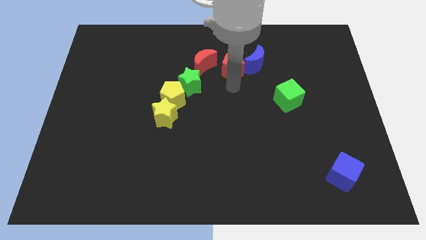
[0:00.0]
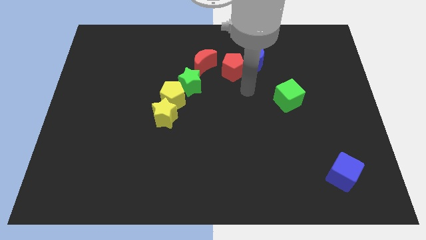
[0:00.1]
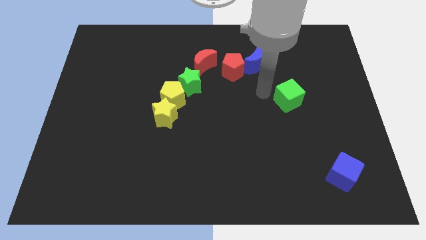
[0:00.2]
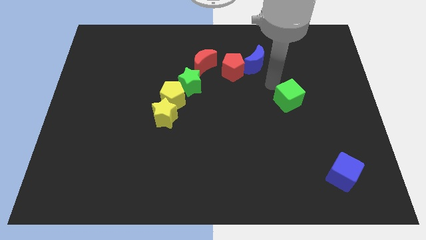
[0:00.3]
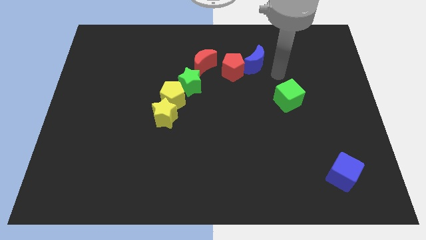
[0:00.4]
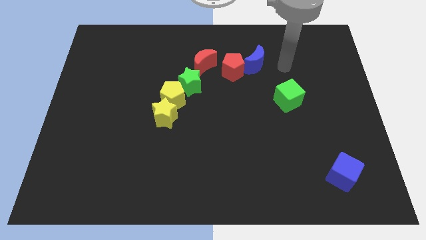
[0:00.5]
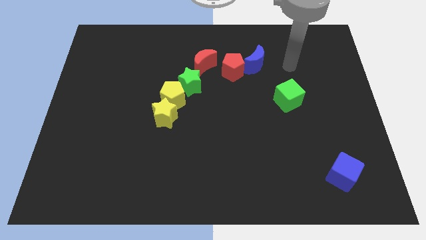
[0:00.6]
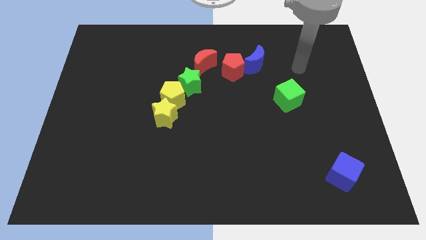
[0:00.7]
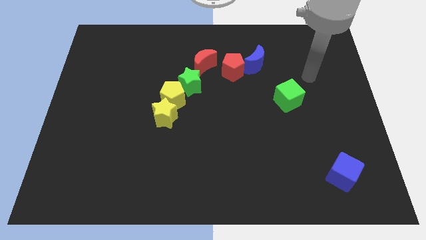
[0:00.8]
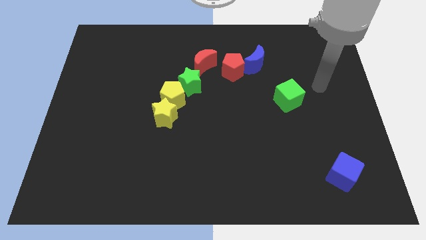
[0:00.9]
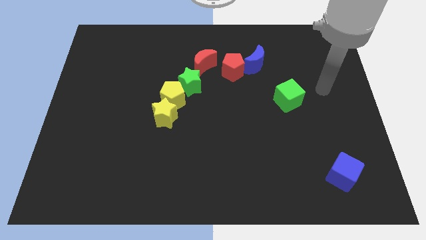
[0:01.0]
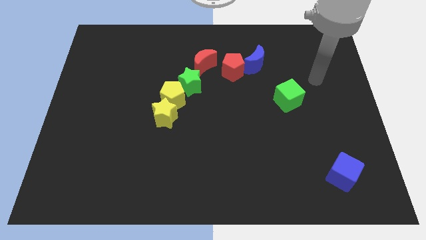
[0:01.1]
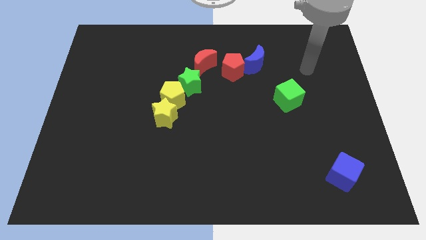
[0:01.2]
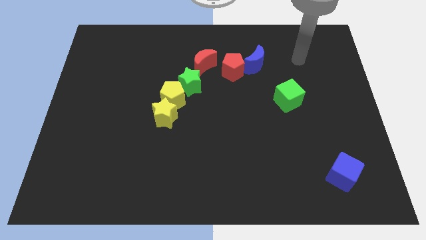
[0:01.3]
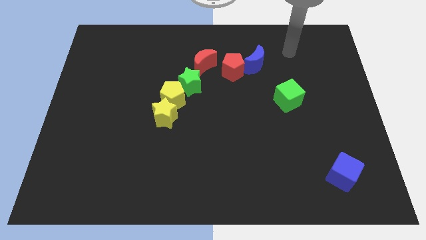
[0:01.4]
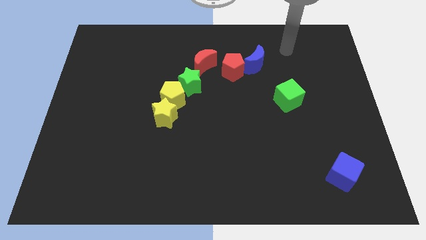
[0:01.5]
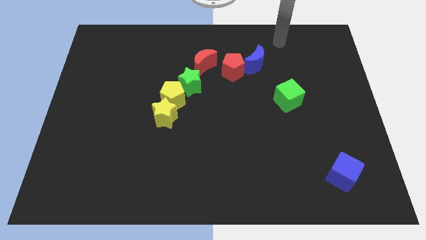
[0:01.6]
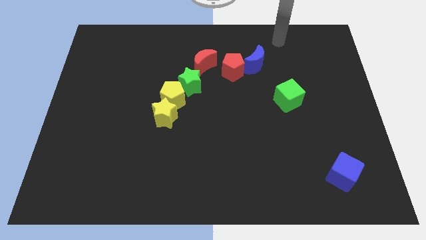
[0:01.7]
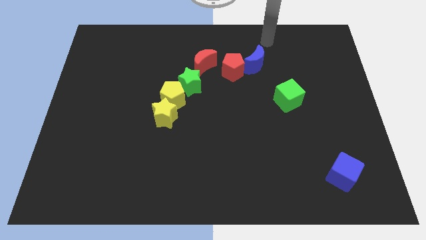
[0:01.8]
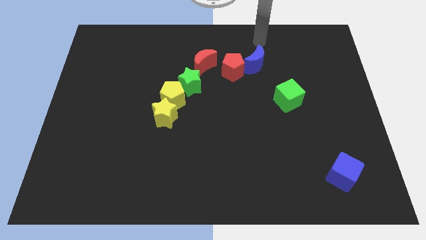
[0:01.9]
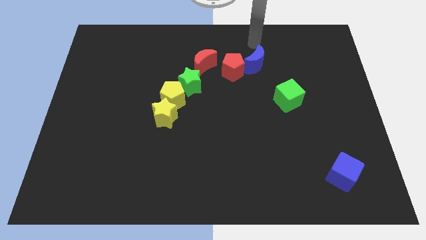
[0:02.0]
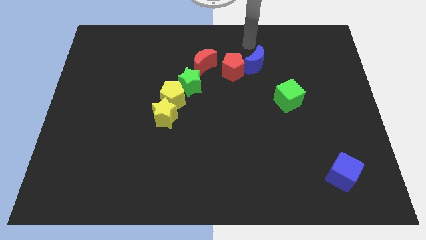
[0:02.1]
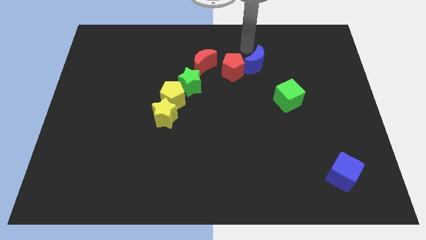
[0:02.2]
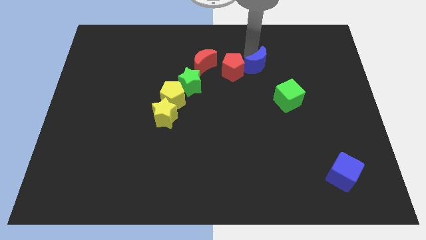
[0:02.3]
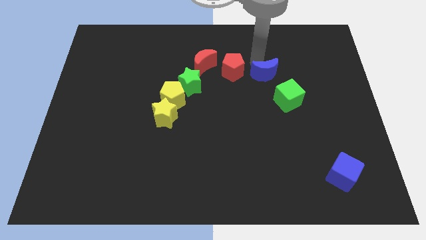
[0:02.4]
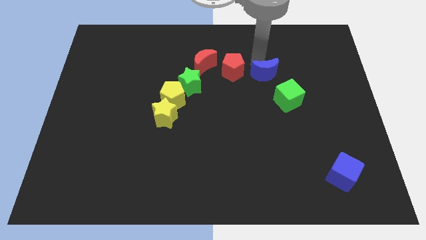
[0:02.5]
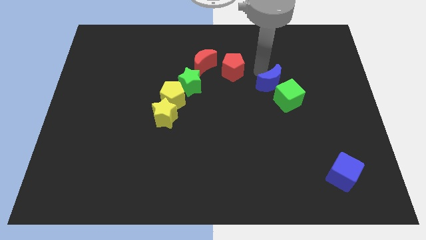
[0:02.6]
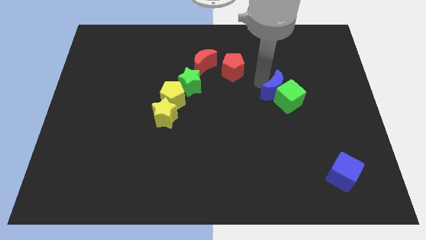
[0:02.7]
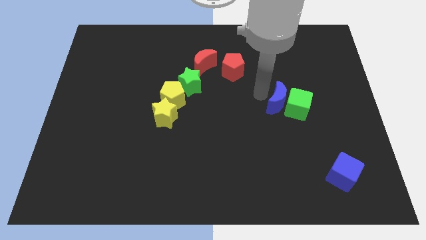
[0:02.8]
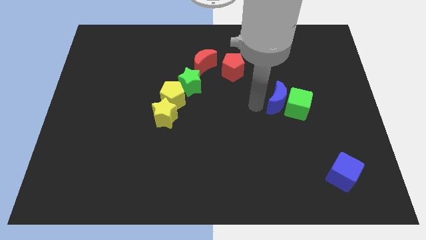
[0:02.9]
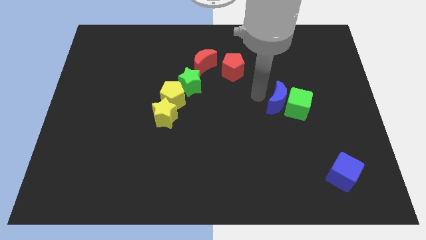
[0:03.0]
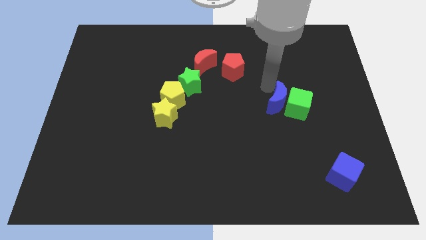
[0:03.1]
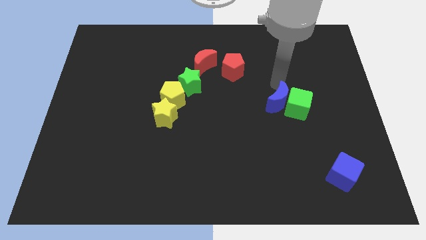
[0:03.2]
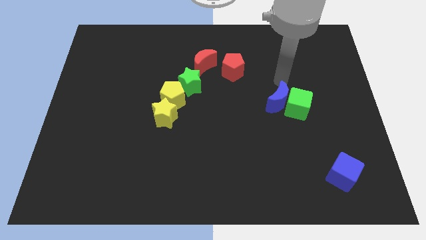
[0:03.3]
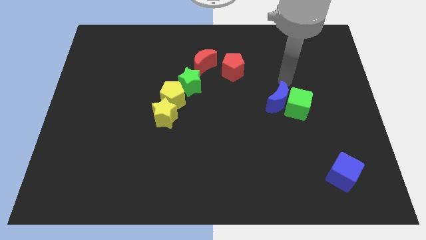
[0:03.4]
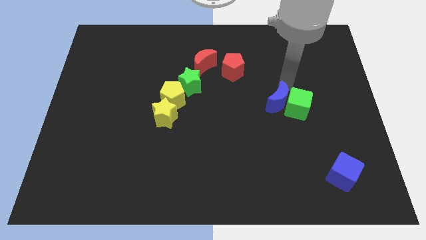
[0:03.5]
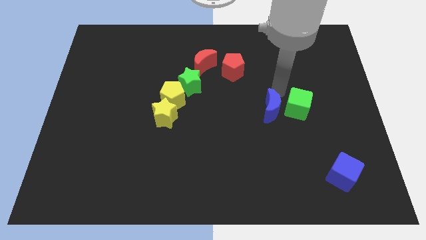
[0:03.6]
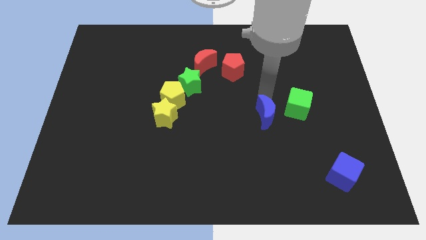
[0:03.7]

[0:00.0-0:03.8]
push the blue crescent to the left of the green cube

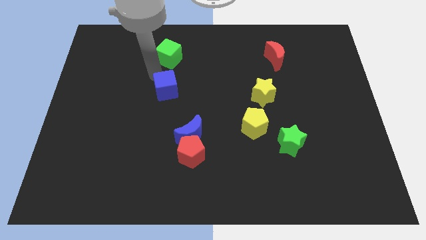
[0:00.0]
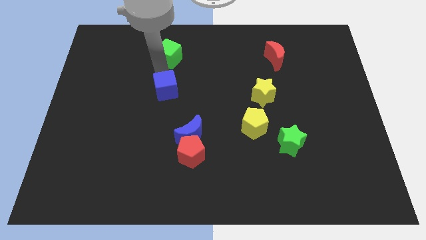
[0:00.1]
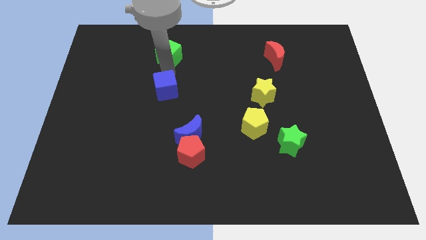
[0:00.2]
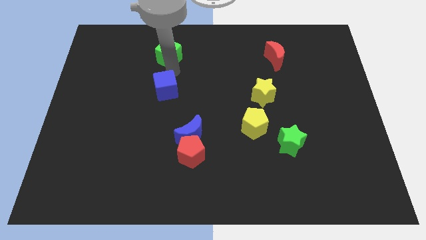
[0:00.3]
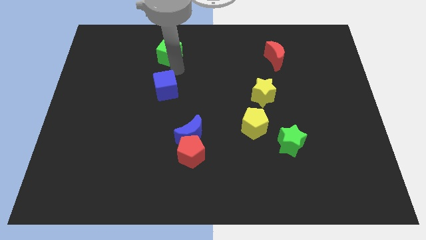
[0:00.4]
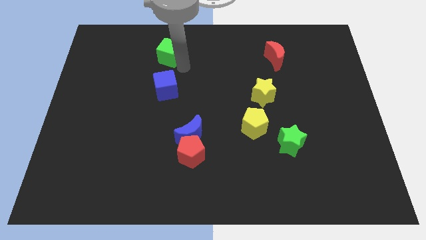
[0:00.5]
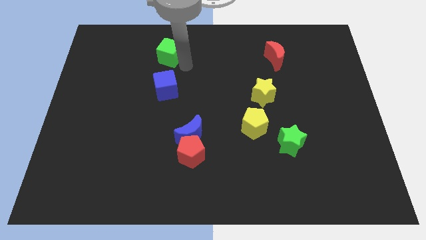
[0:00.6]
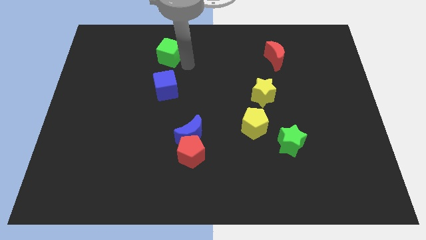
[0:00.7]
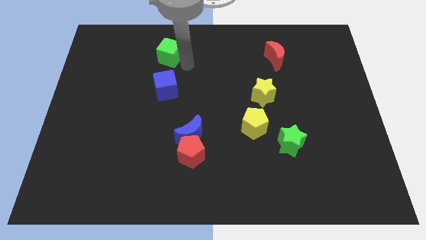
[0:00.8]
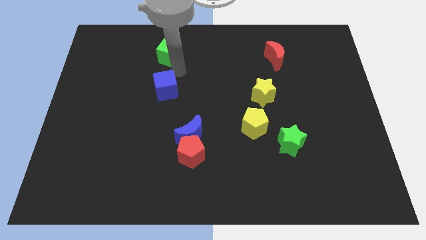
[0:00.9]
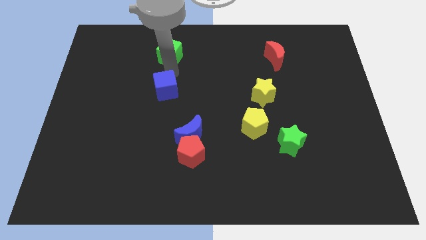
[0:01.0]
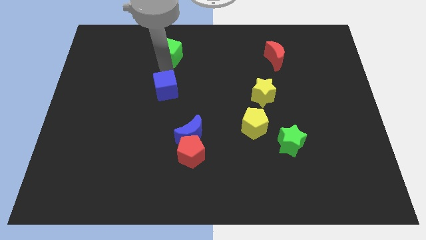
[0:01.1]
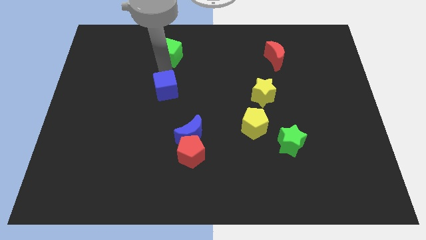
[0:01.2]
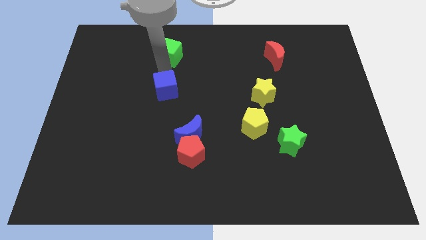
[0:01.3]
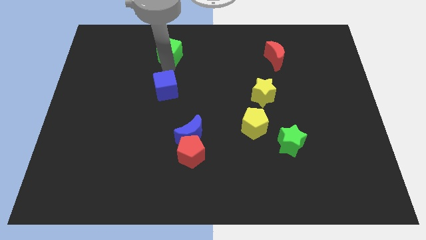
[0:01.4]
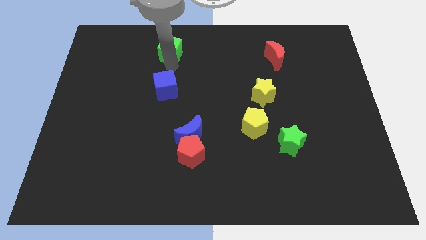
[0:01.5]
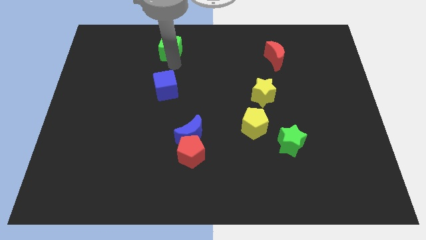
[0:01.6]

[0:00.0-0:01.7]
slightly move the green cube to the top center of the board

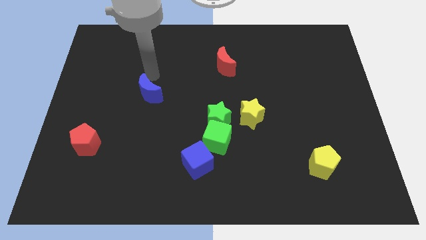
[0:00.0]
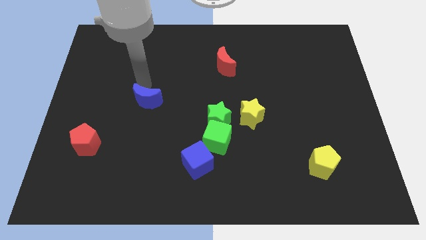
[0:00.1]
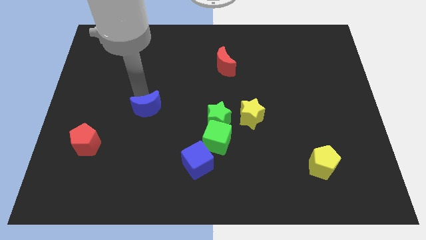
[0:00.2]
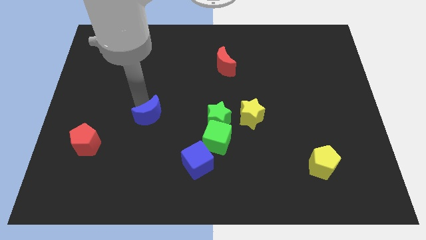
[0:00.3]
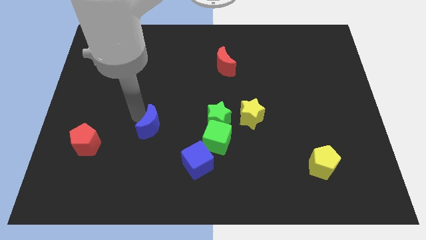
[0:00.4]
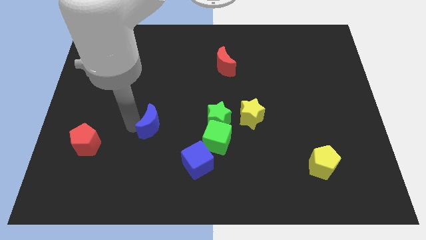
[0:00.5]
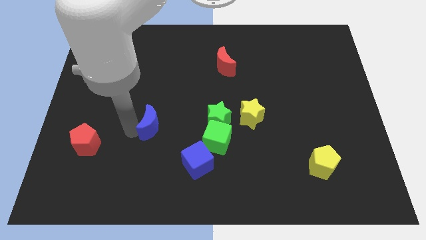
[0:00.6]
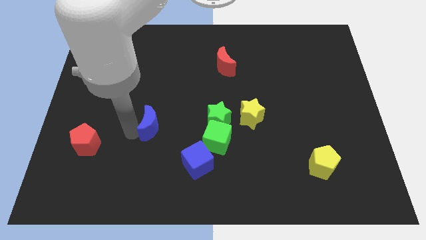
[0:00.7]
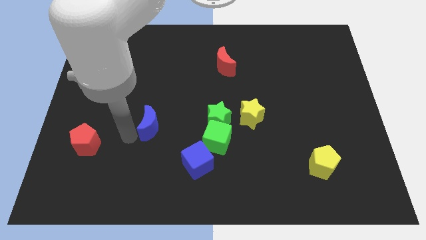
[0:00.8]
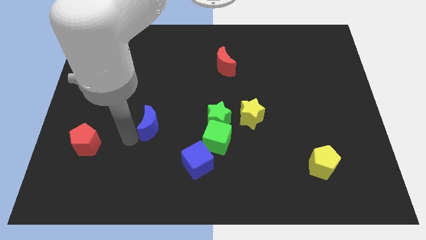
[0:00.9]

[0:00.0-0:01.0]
place the blue crescent to the left side of the green cube

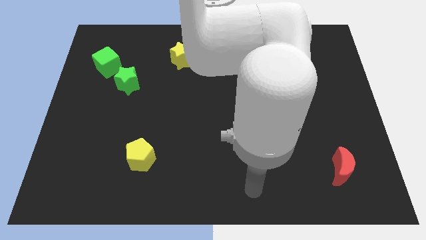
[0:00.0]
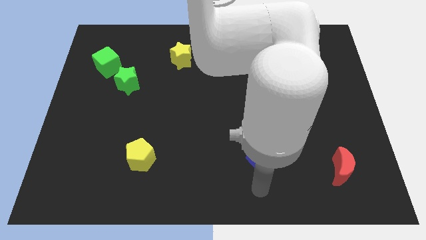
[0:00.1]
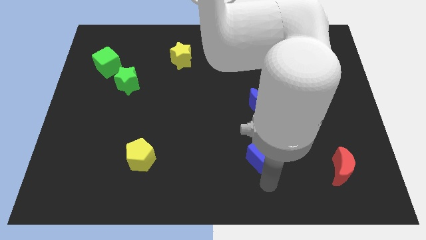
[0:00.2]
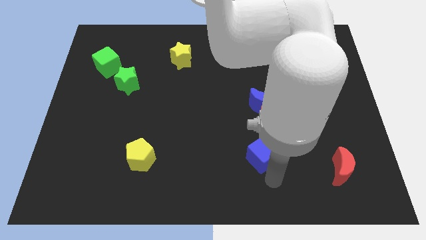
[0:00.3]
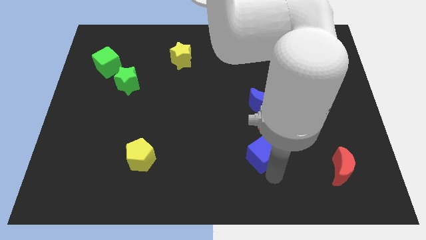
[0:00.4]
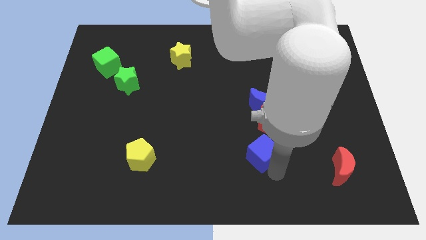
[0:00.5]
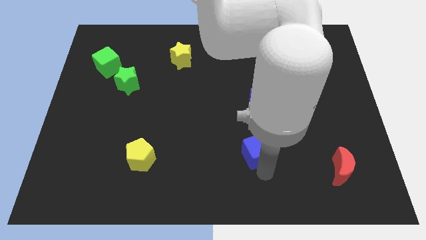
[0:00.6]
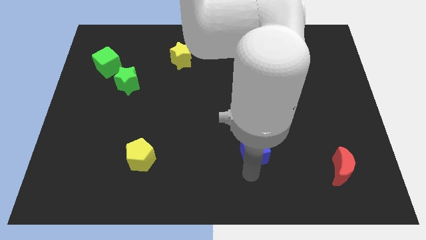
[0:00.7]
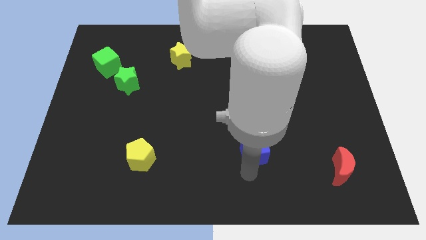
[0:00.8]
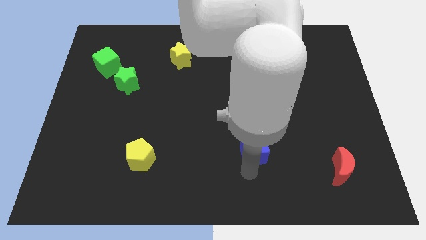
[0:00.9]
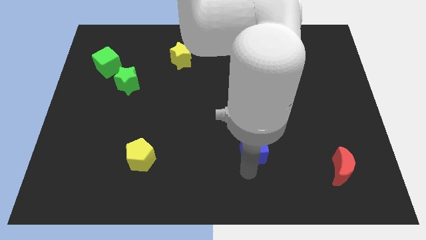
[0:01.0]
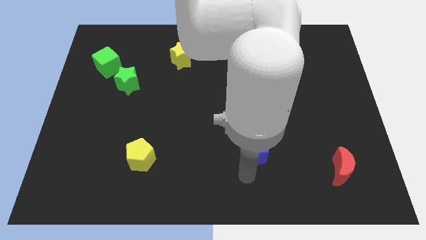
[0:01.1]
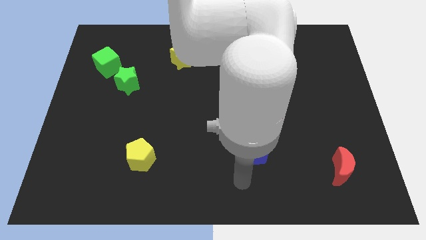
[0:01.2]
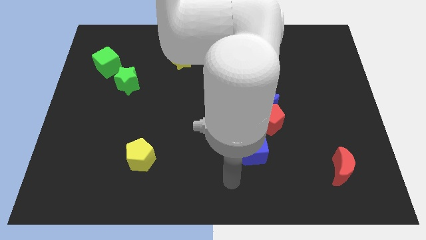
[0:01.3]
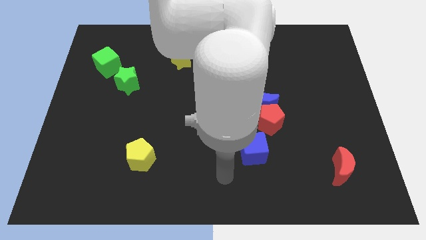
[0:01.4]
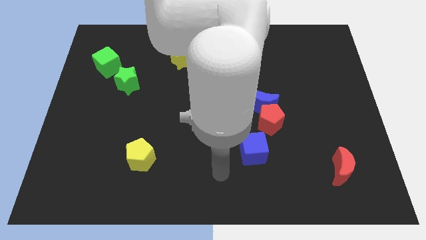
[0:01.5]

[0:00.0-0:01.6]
move the blue cube to the bottom left side of the red pentagon

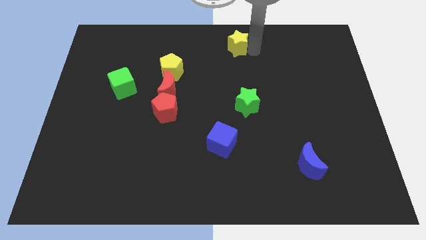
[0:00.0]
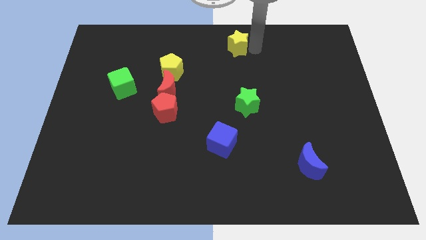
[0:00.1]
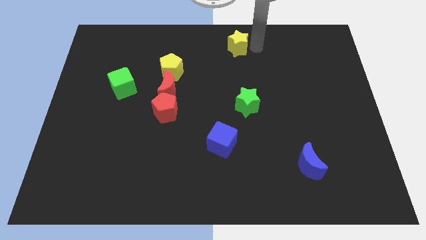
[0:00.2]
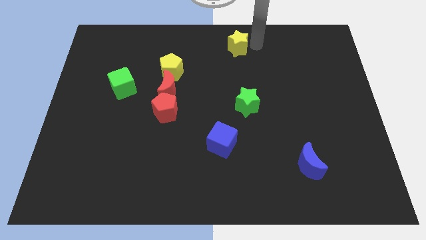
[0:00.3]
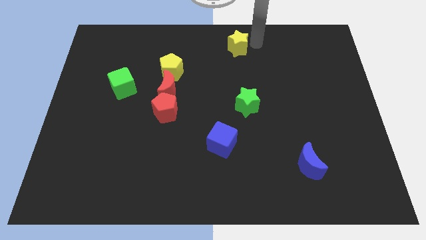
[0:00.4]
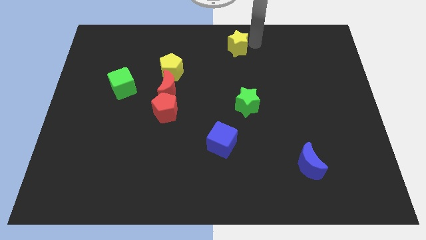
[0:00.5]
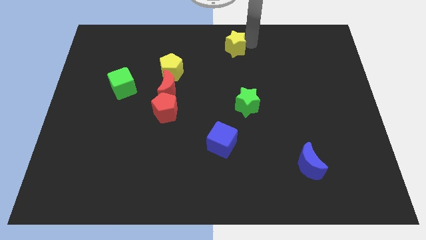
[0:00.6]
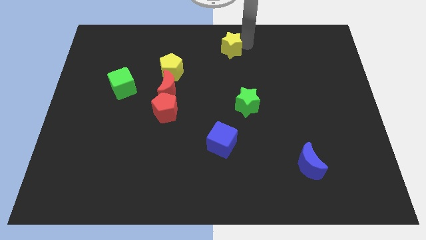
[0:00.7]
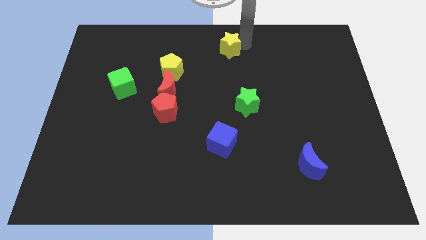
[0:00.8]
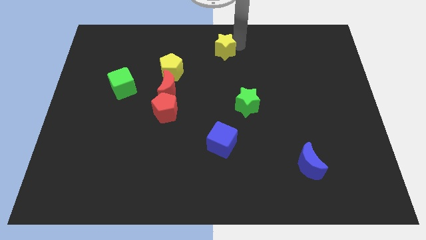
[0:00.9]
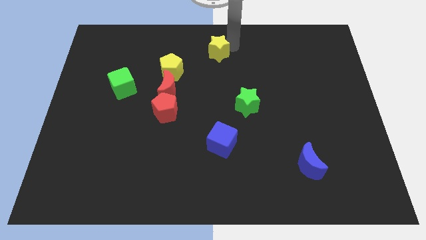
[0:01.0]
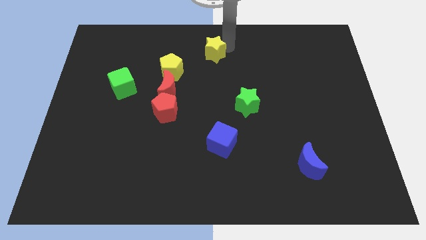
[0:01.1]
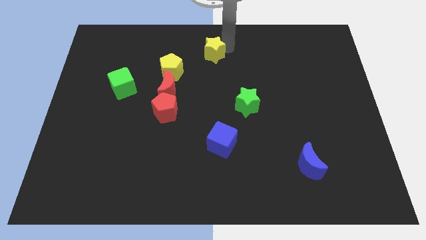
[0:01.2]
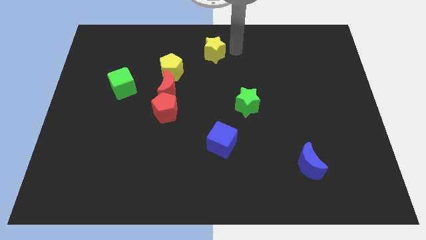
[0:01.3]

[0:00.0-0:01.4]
push the yellow star to the right of the yellow pentagon
